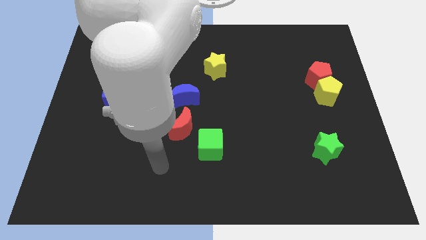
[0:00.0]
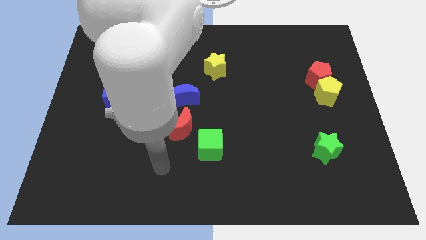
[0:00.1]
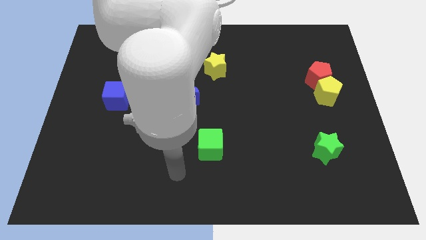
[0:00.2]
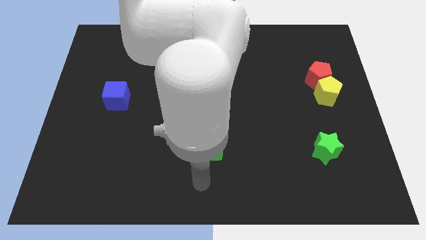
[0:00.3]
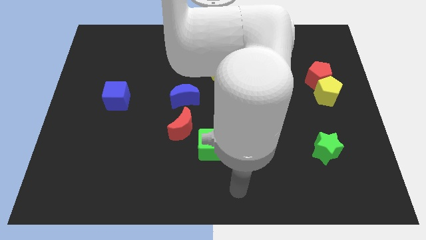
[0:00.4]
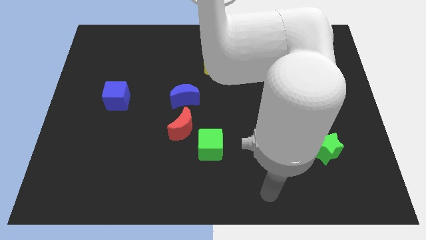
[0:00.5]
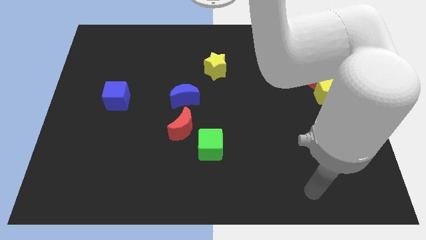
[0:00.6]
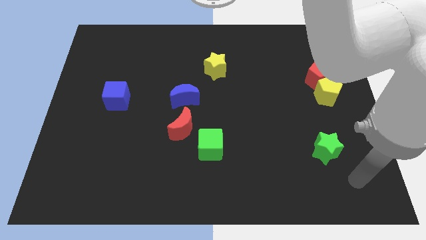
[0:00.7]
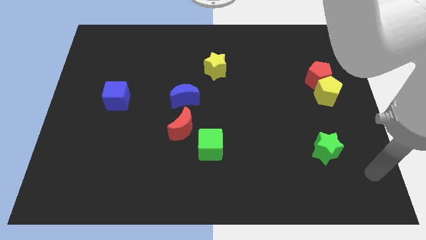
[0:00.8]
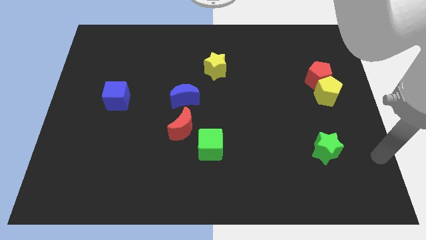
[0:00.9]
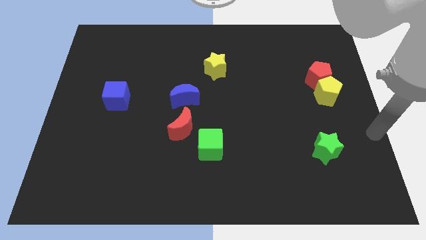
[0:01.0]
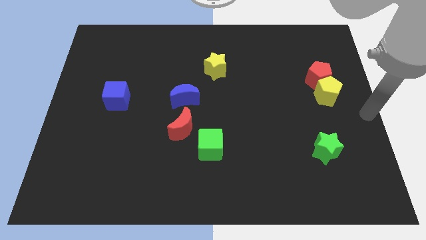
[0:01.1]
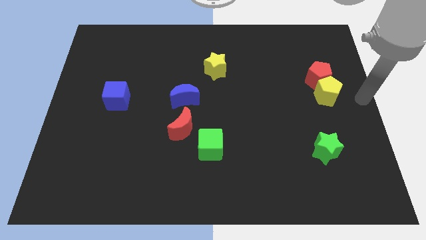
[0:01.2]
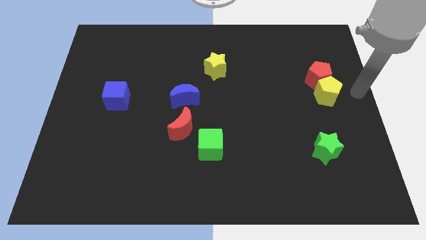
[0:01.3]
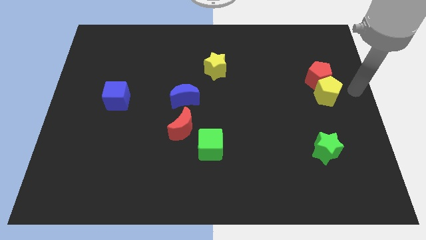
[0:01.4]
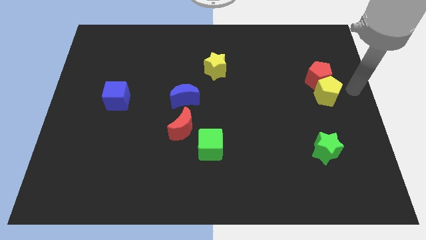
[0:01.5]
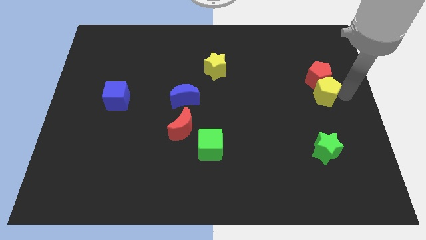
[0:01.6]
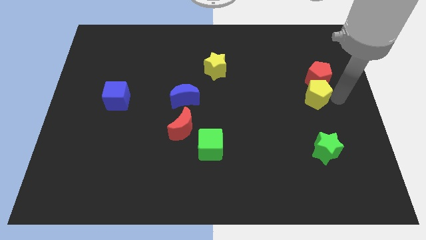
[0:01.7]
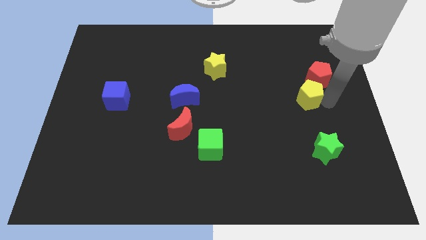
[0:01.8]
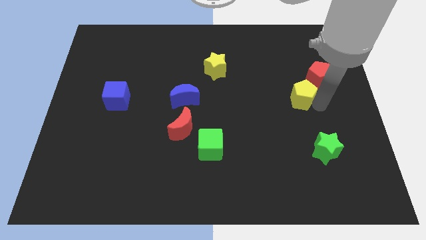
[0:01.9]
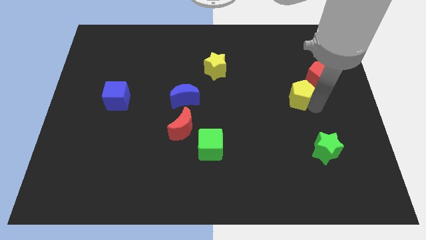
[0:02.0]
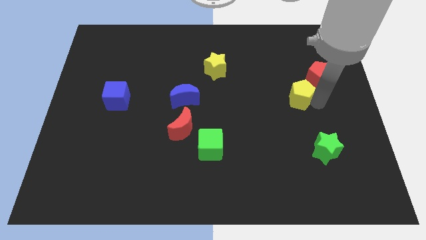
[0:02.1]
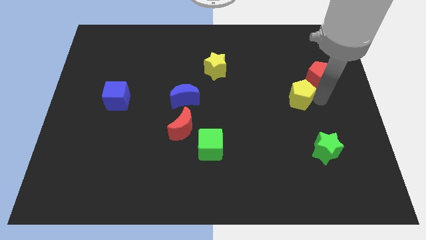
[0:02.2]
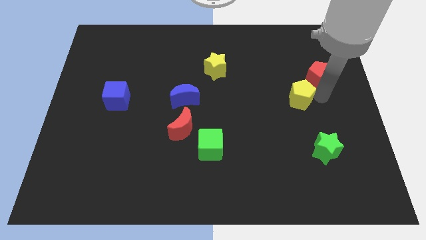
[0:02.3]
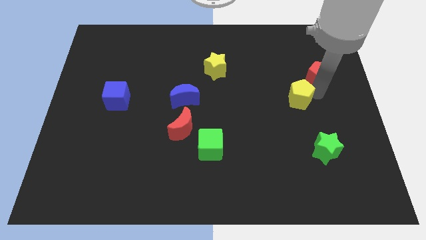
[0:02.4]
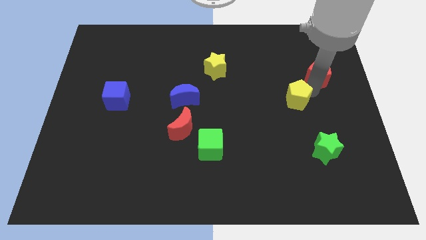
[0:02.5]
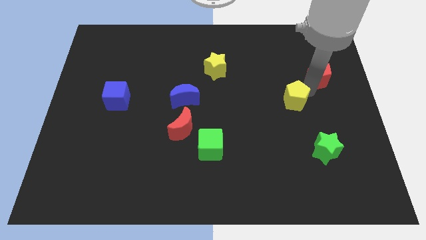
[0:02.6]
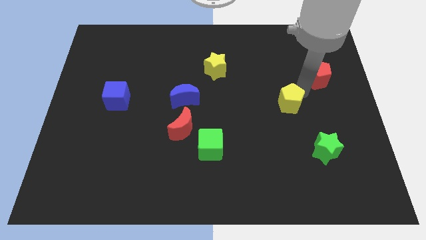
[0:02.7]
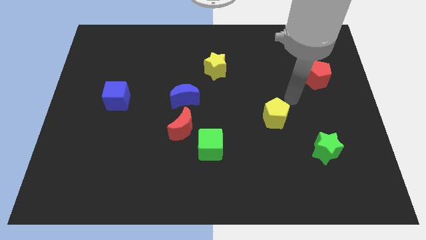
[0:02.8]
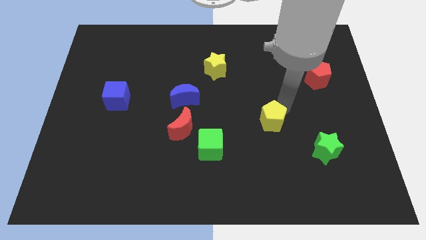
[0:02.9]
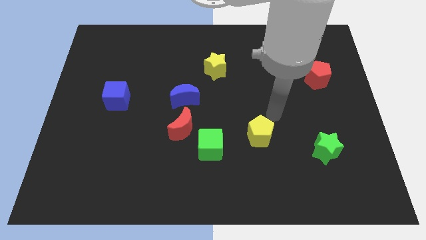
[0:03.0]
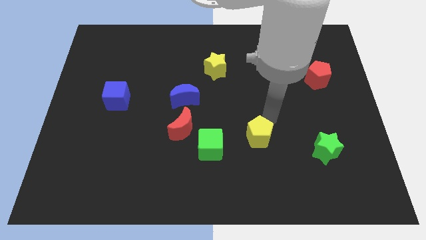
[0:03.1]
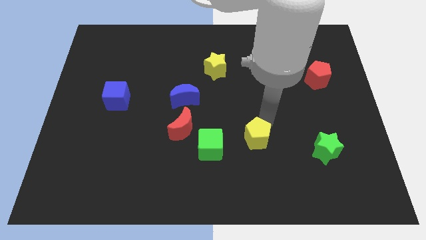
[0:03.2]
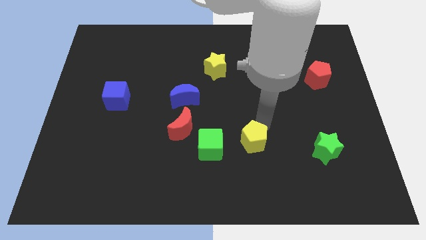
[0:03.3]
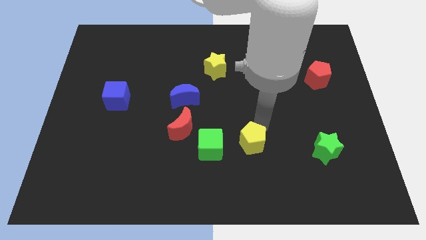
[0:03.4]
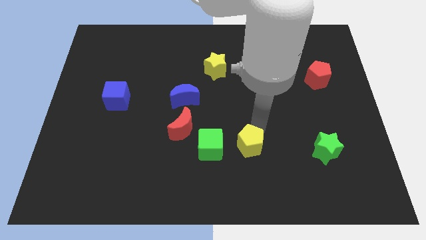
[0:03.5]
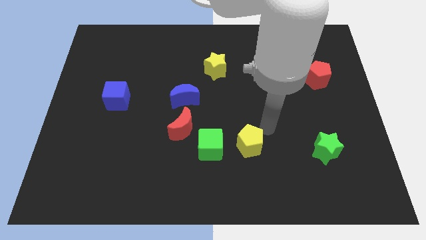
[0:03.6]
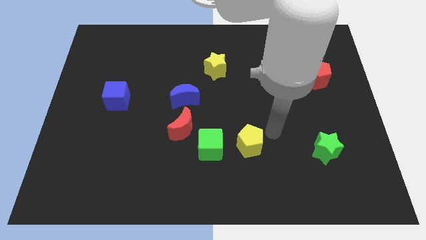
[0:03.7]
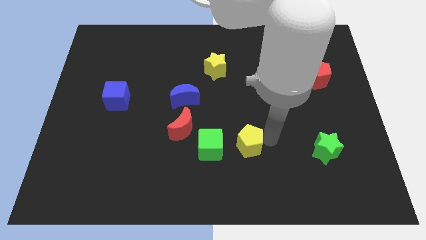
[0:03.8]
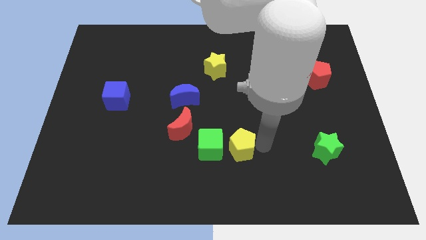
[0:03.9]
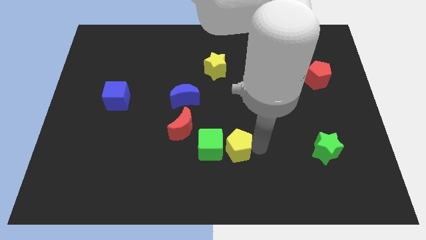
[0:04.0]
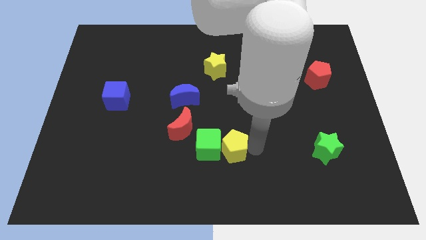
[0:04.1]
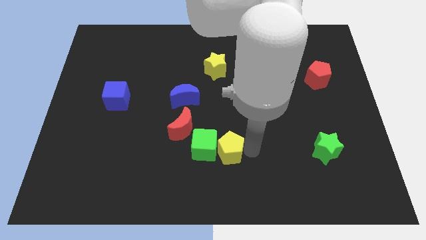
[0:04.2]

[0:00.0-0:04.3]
move the yellow pentagon next to the green cube

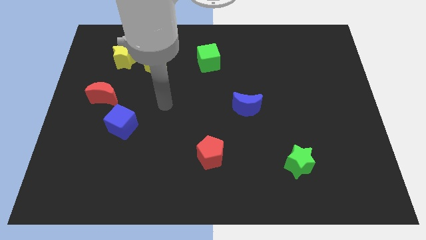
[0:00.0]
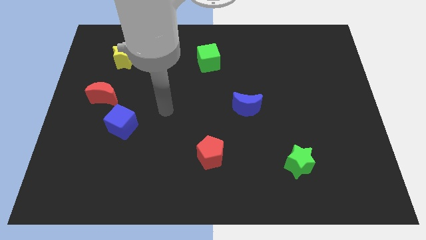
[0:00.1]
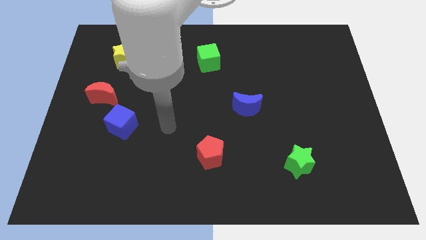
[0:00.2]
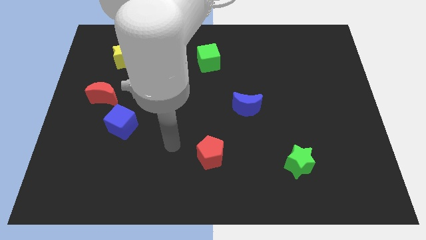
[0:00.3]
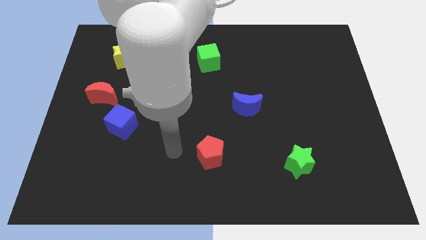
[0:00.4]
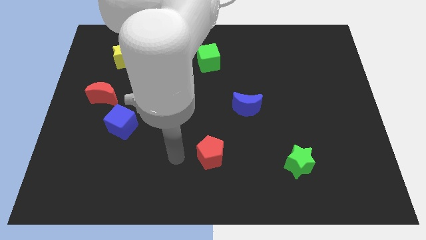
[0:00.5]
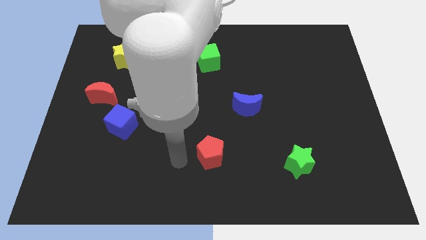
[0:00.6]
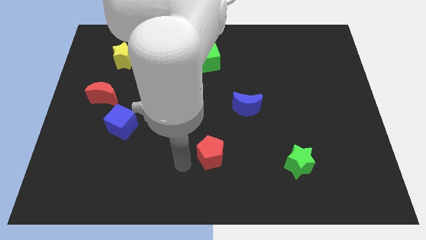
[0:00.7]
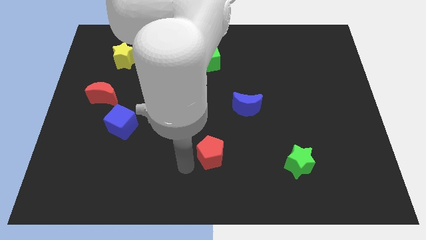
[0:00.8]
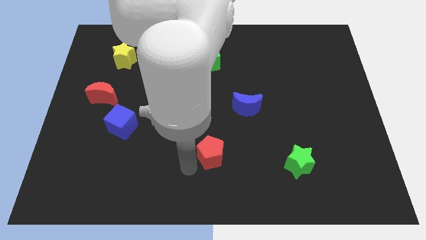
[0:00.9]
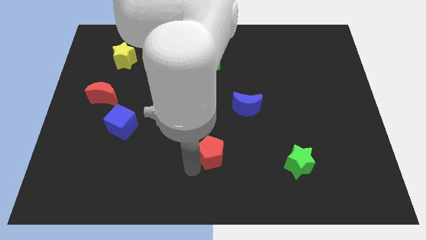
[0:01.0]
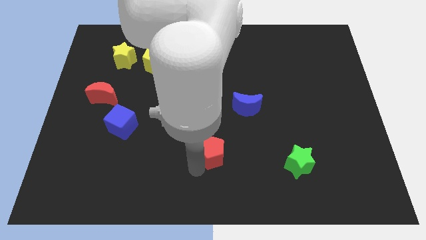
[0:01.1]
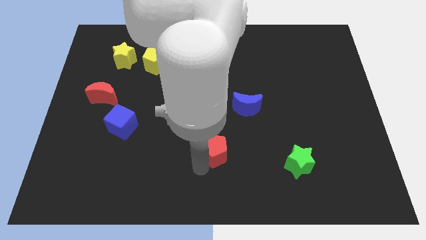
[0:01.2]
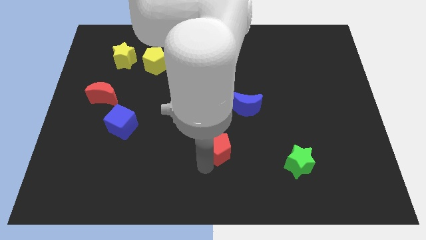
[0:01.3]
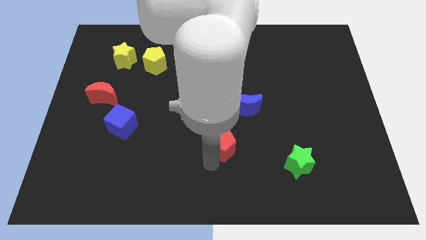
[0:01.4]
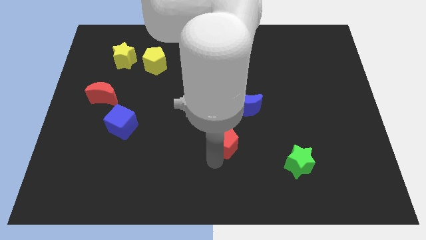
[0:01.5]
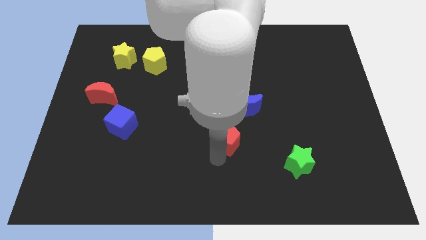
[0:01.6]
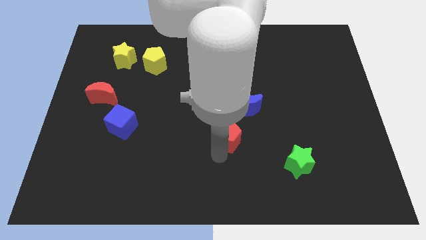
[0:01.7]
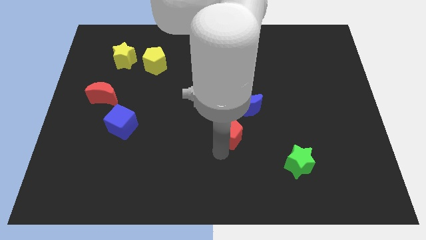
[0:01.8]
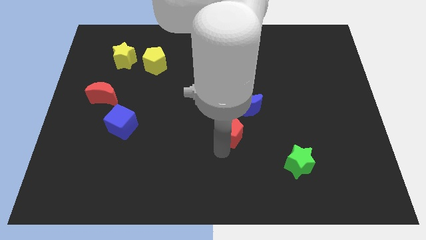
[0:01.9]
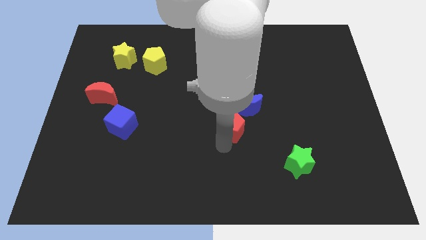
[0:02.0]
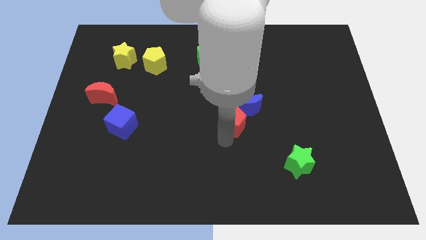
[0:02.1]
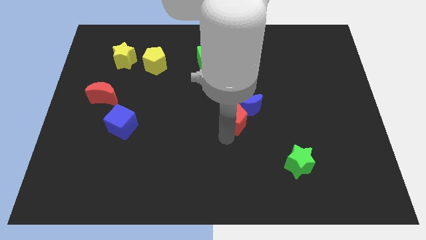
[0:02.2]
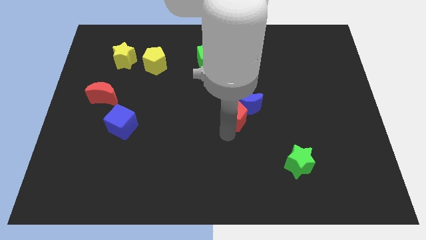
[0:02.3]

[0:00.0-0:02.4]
push the red pentagon close to the blue moon

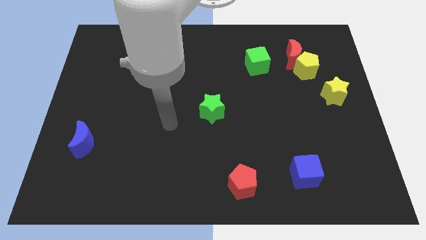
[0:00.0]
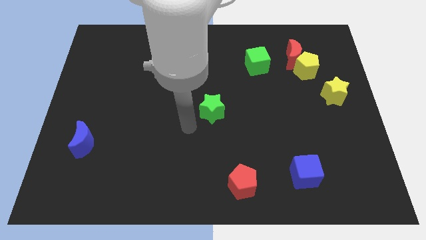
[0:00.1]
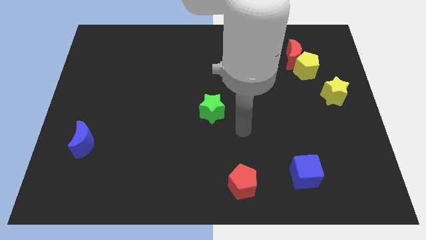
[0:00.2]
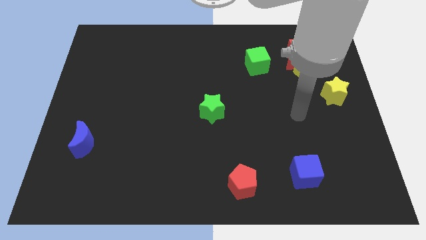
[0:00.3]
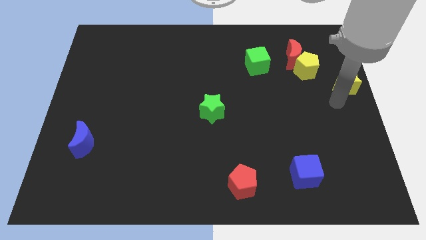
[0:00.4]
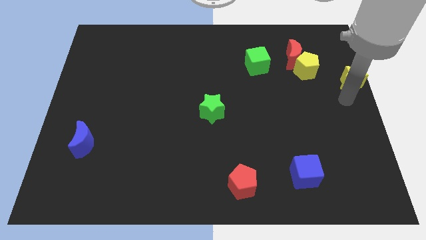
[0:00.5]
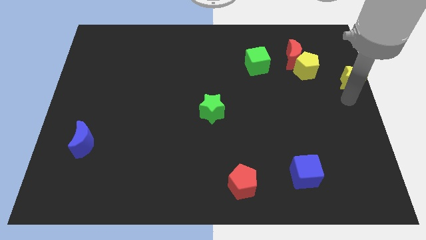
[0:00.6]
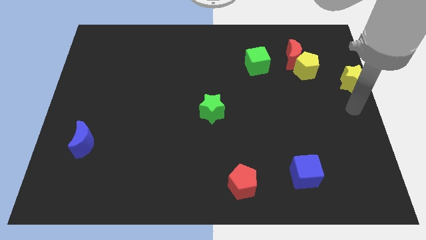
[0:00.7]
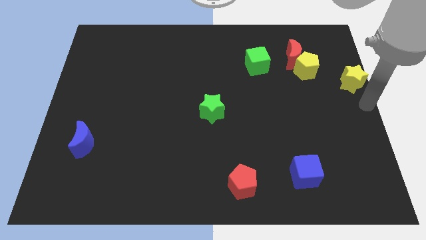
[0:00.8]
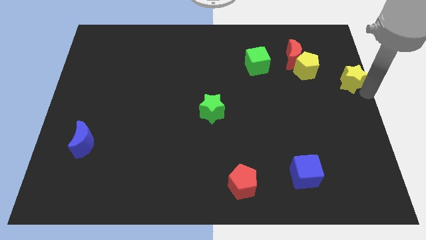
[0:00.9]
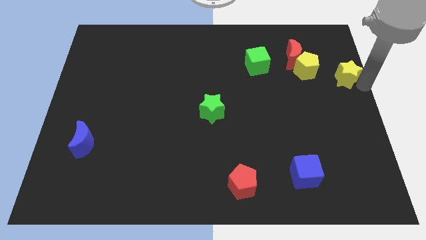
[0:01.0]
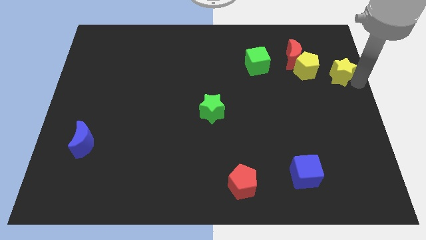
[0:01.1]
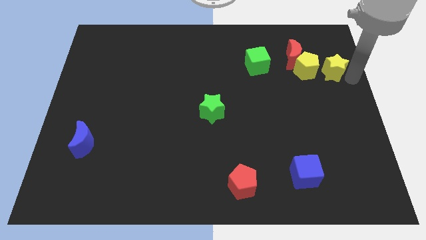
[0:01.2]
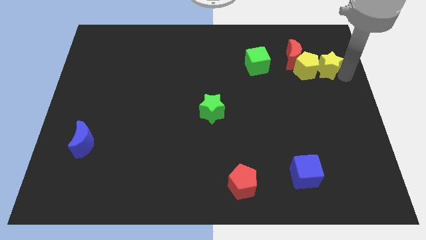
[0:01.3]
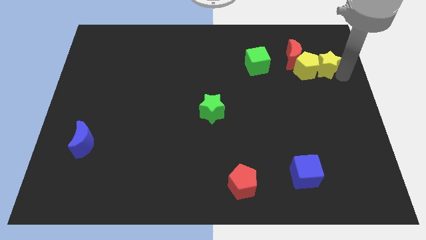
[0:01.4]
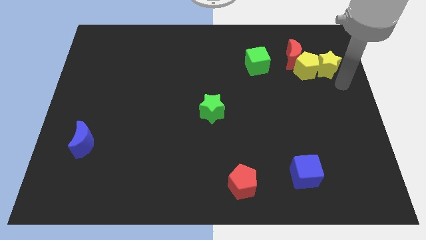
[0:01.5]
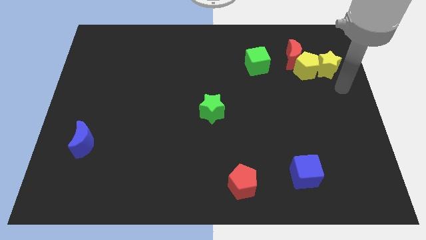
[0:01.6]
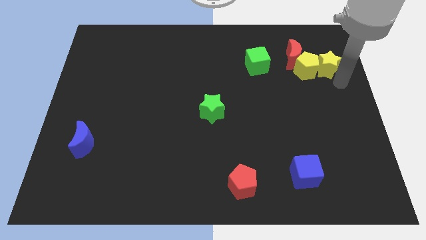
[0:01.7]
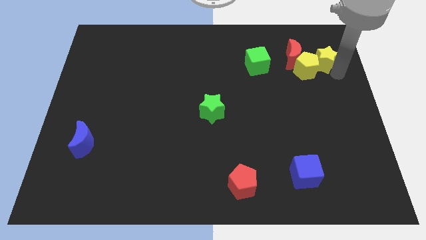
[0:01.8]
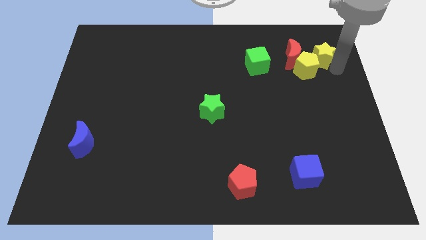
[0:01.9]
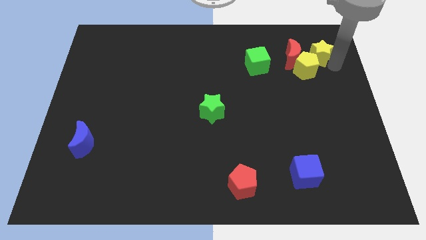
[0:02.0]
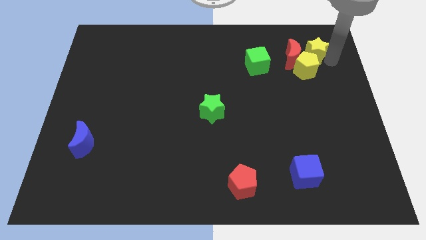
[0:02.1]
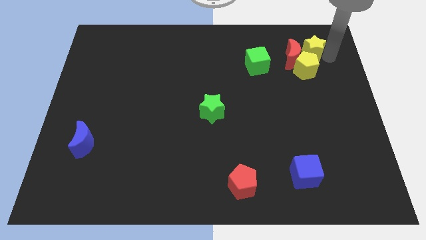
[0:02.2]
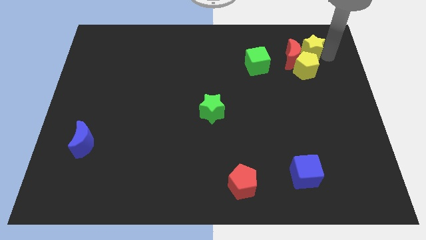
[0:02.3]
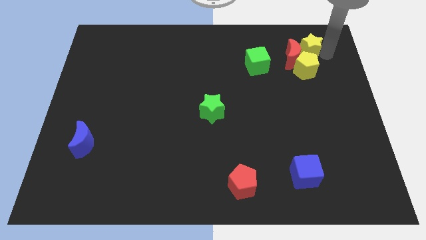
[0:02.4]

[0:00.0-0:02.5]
push the yellow star to the red moon
